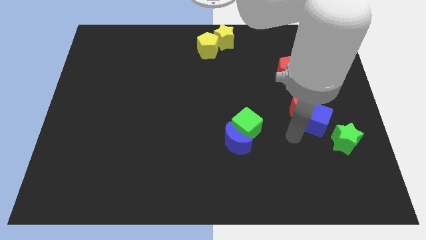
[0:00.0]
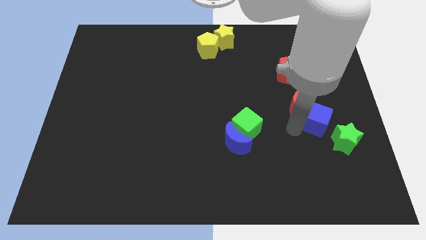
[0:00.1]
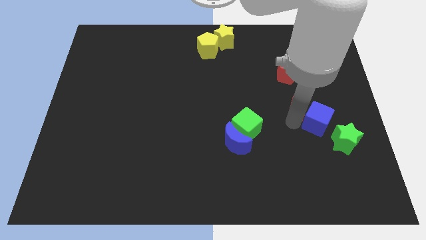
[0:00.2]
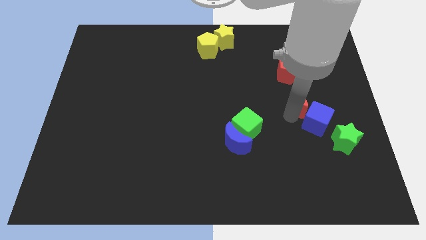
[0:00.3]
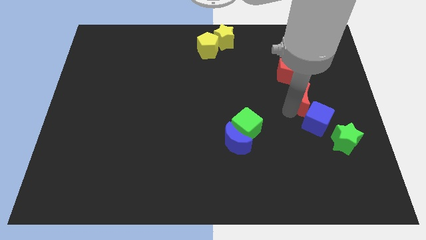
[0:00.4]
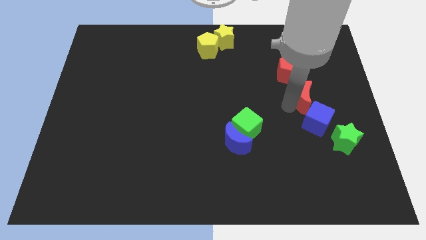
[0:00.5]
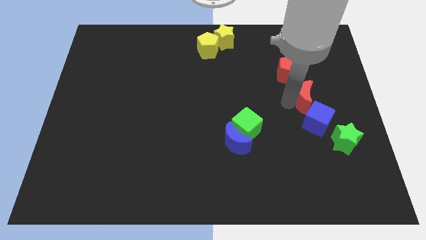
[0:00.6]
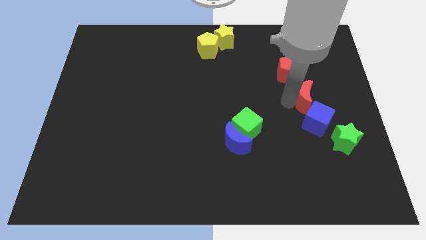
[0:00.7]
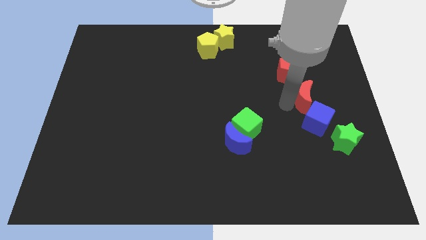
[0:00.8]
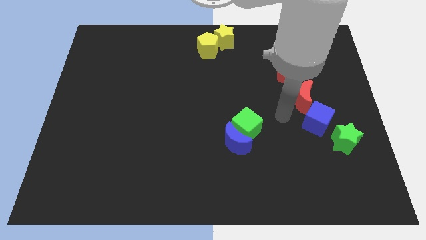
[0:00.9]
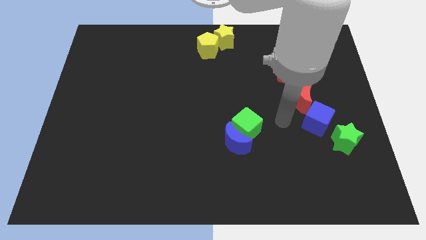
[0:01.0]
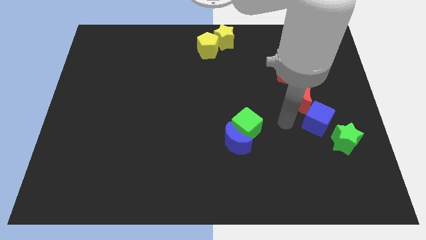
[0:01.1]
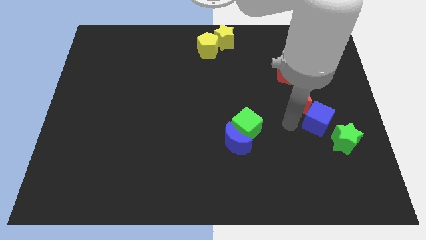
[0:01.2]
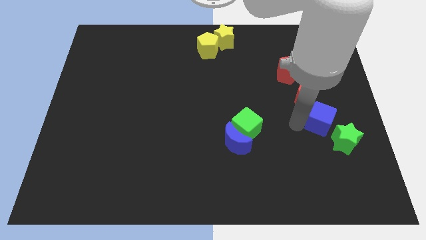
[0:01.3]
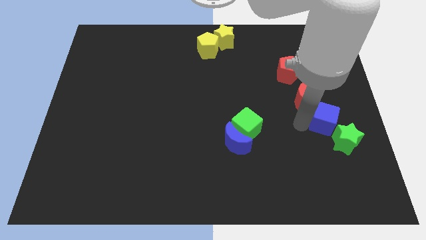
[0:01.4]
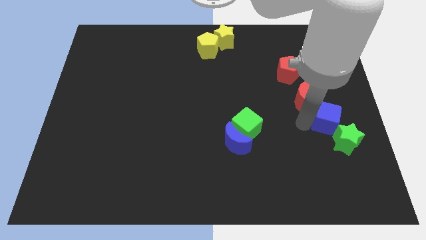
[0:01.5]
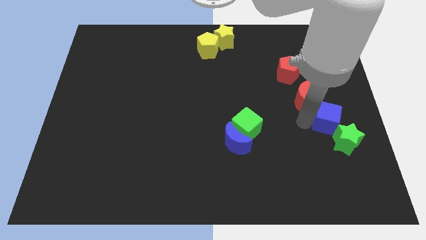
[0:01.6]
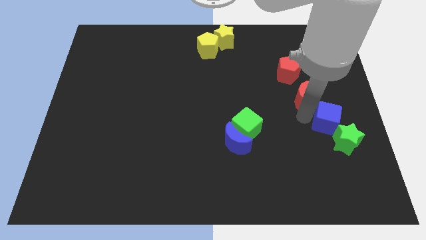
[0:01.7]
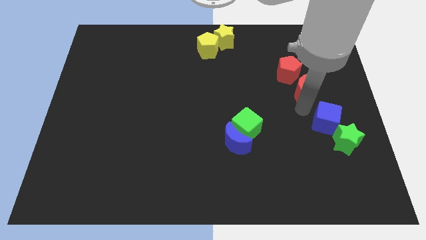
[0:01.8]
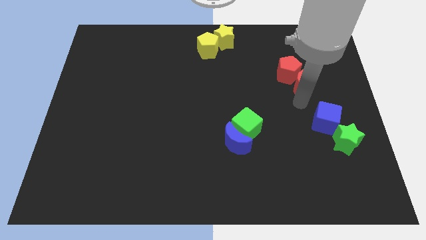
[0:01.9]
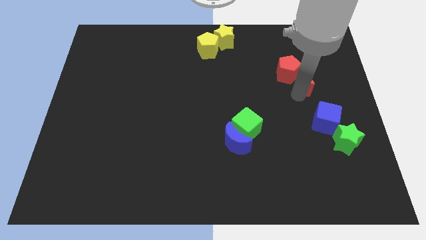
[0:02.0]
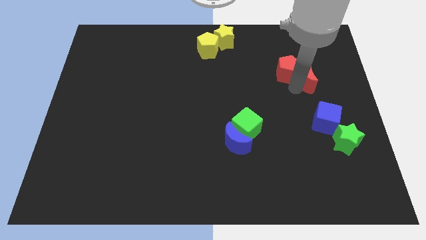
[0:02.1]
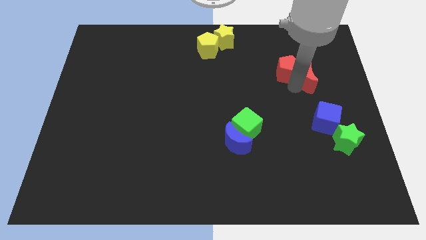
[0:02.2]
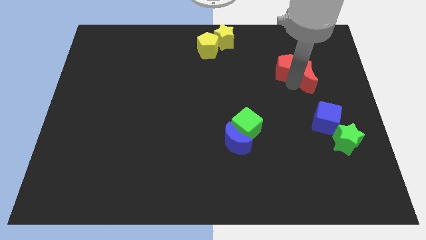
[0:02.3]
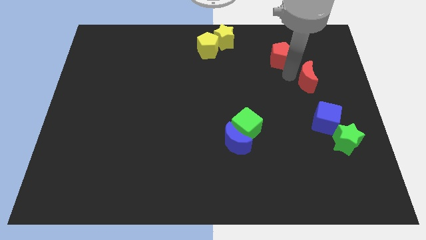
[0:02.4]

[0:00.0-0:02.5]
place the red crescent into the red pentagon

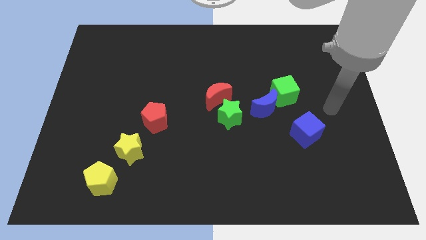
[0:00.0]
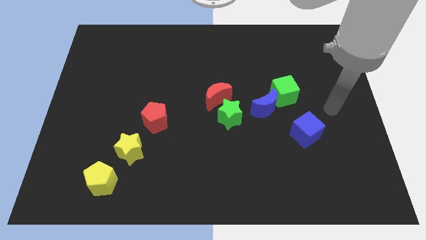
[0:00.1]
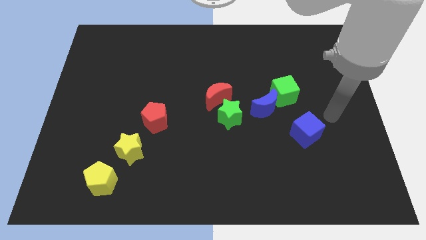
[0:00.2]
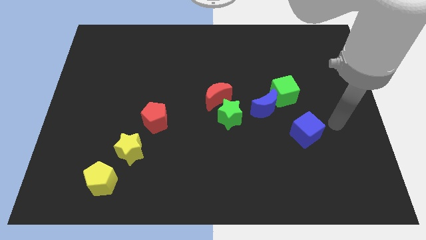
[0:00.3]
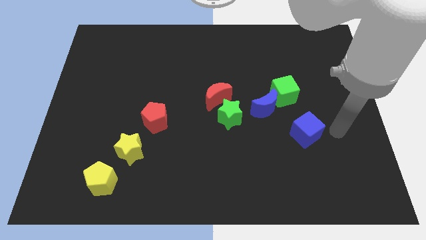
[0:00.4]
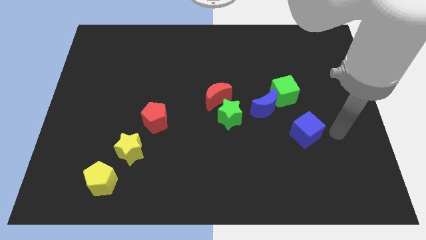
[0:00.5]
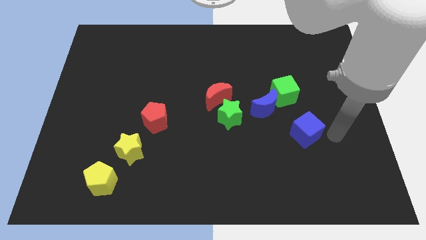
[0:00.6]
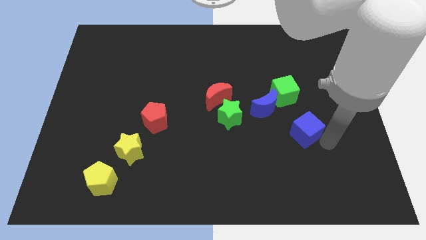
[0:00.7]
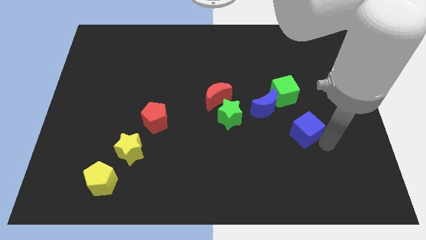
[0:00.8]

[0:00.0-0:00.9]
place your arm towards the right below of blue cube

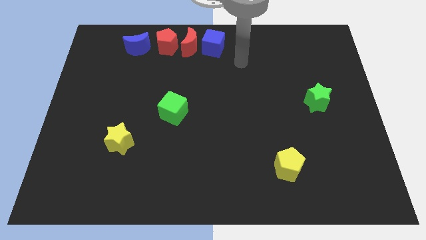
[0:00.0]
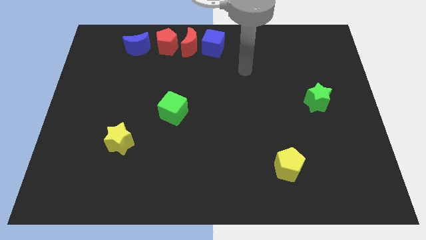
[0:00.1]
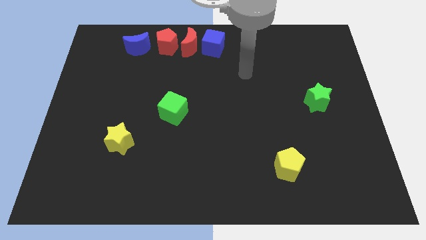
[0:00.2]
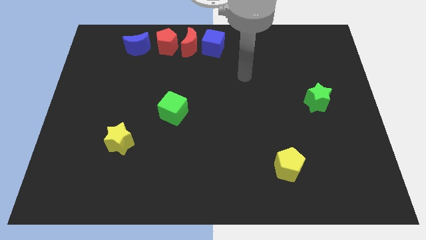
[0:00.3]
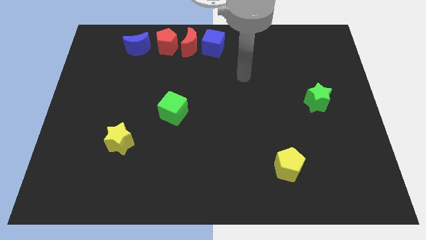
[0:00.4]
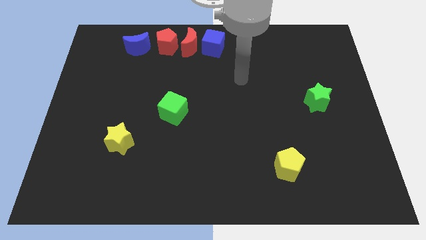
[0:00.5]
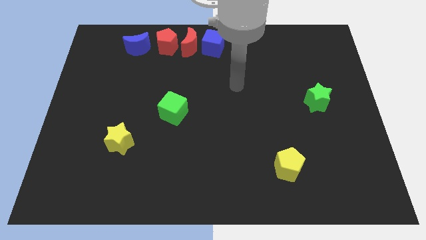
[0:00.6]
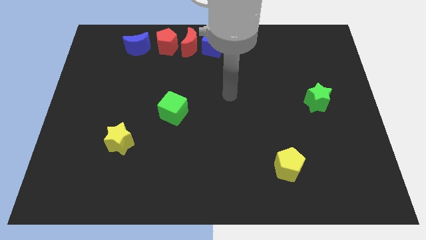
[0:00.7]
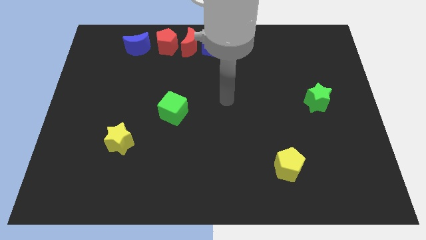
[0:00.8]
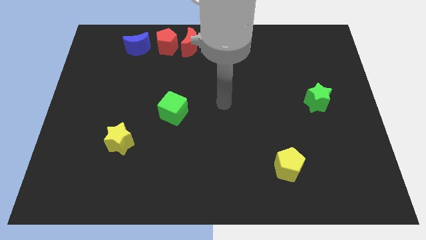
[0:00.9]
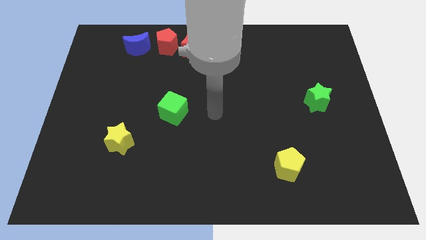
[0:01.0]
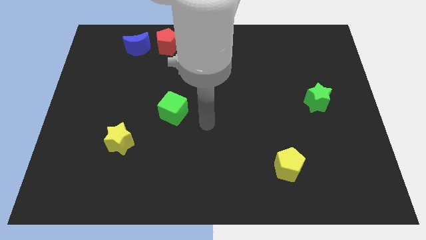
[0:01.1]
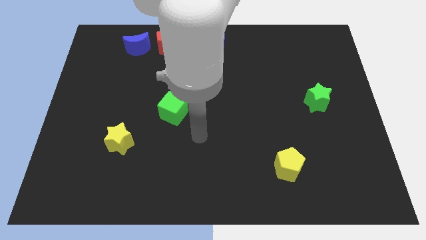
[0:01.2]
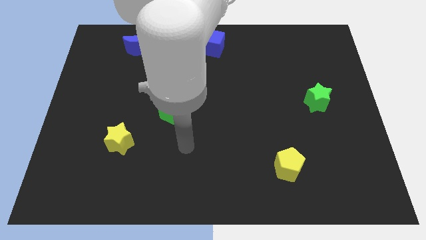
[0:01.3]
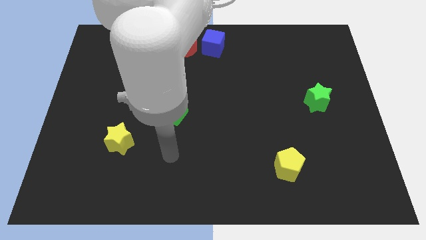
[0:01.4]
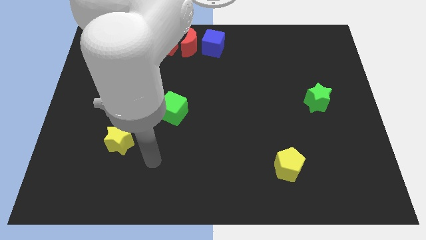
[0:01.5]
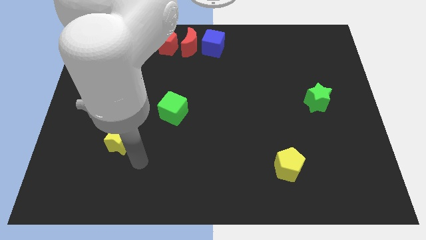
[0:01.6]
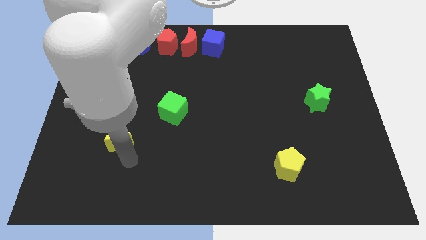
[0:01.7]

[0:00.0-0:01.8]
move your arm to the bottom of the yellow star

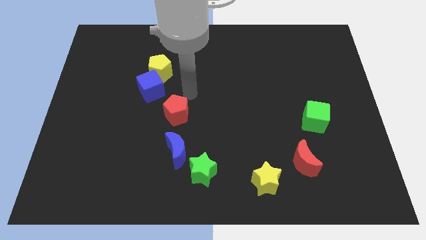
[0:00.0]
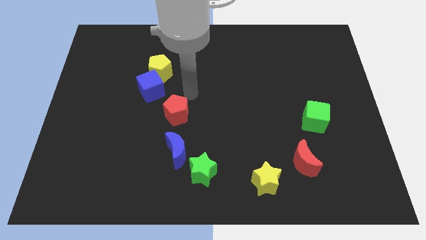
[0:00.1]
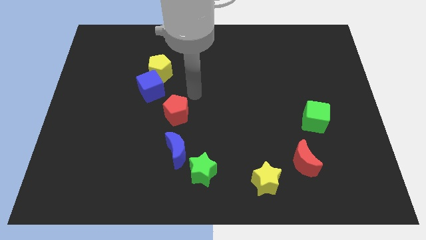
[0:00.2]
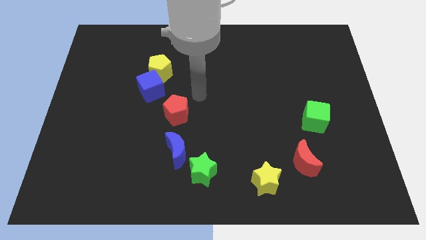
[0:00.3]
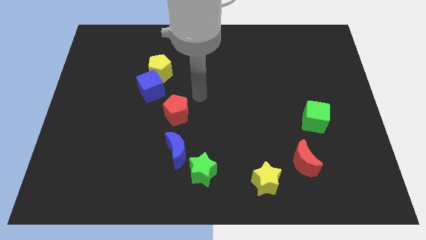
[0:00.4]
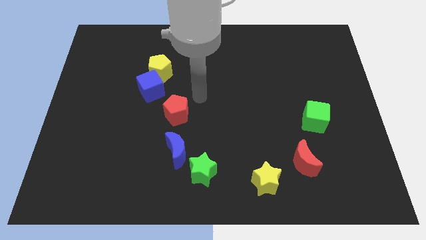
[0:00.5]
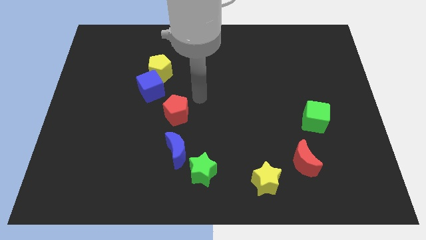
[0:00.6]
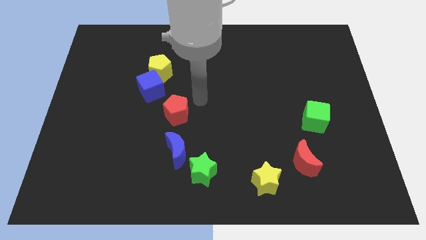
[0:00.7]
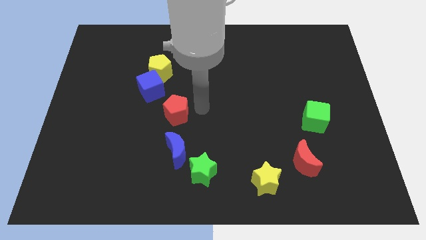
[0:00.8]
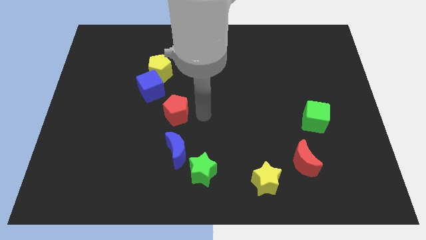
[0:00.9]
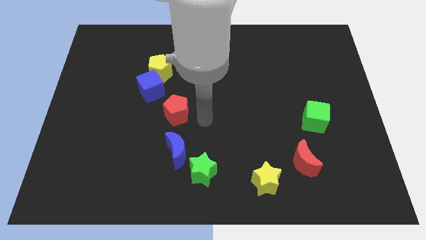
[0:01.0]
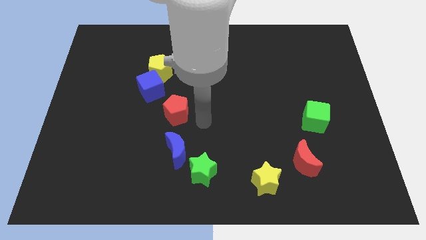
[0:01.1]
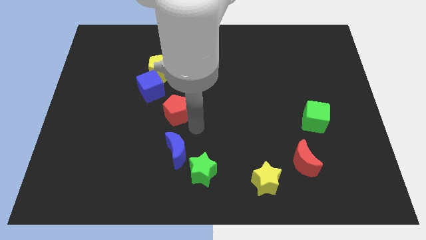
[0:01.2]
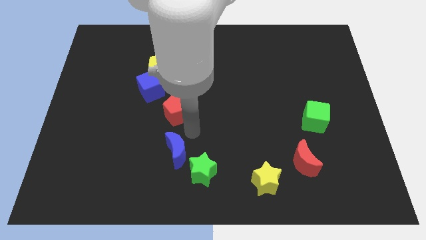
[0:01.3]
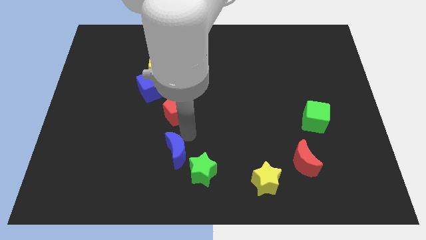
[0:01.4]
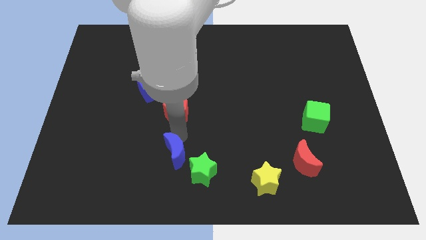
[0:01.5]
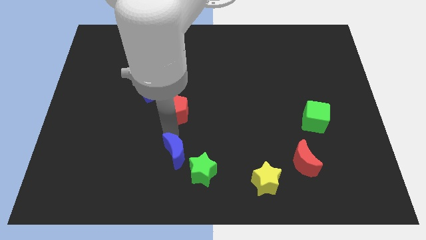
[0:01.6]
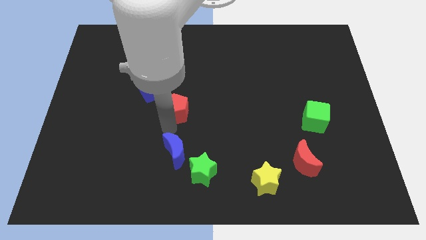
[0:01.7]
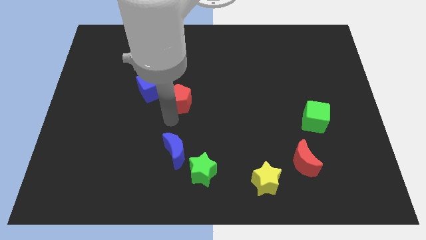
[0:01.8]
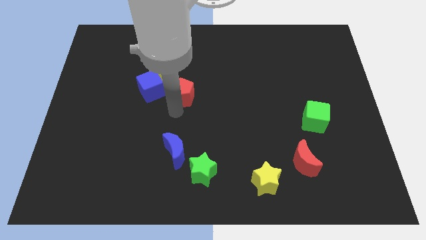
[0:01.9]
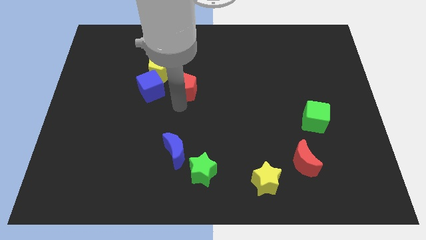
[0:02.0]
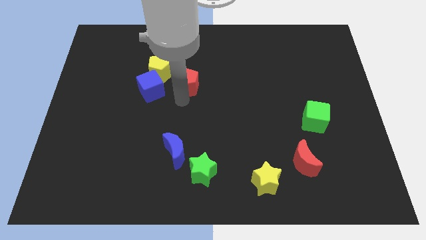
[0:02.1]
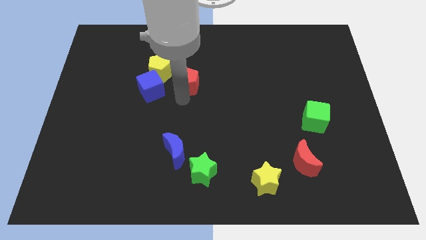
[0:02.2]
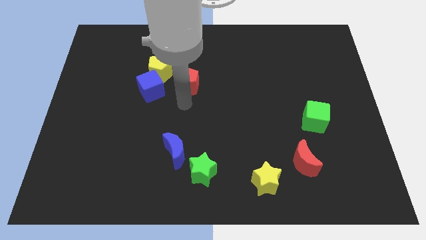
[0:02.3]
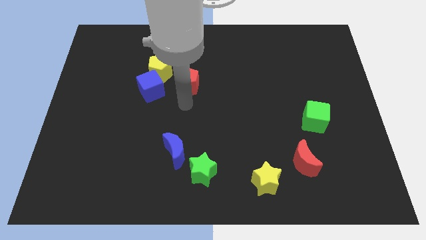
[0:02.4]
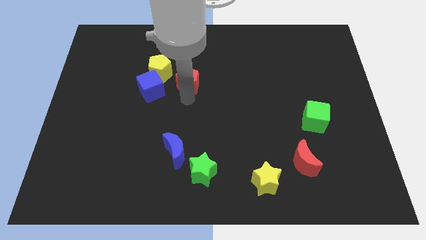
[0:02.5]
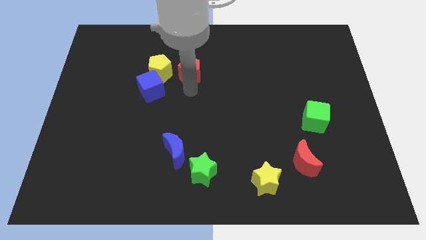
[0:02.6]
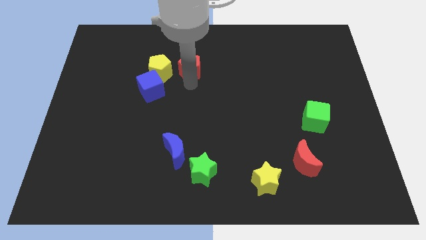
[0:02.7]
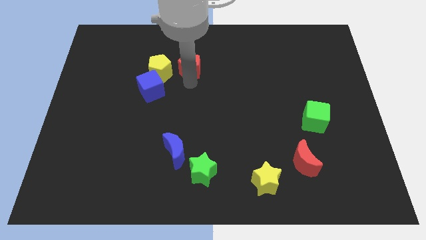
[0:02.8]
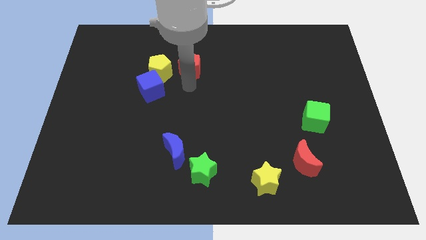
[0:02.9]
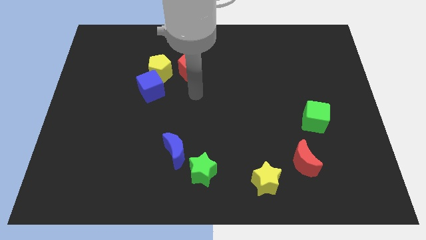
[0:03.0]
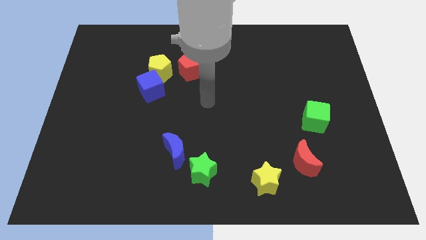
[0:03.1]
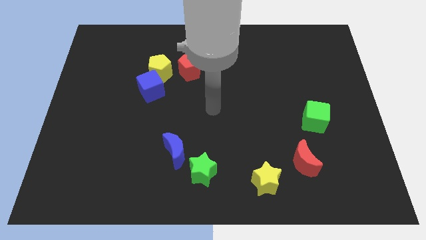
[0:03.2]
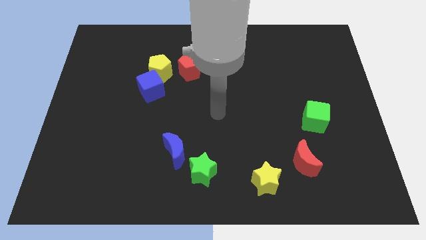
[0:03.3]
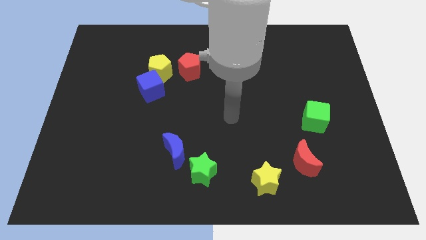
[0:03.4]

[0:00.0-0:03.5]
push red pentagon parallel to the yellow pentagon

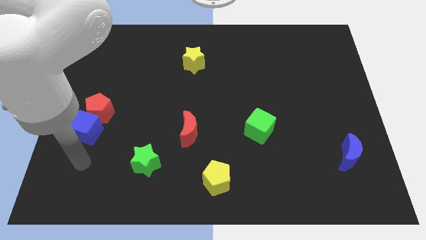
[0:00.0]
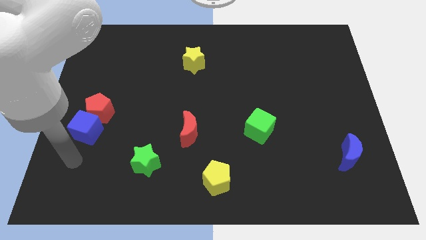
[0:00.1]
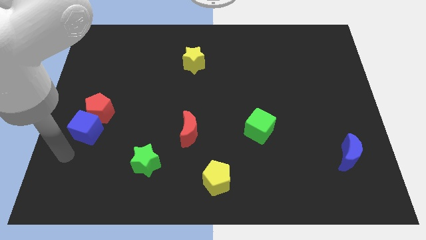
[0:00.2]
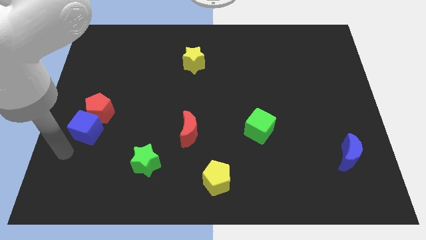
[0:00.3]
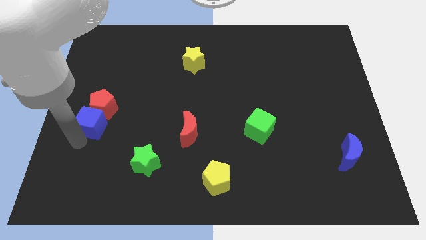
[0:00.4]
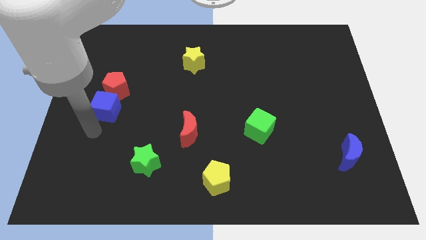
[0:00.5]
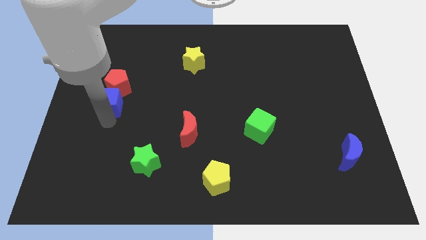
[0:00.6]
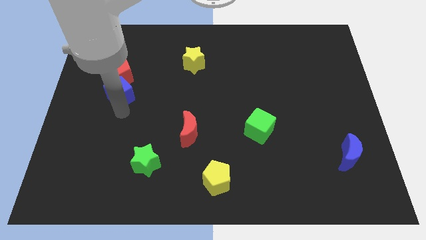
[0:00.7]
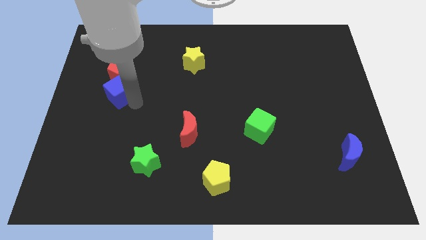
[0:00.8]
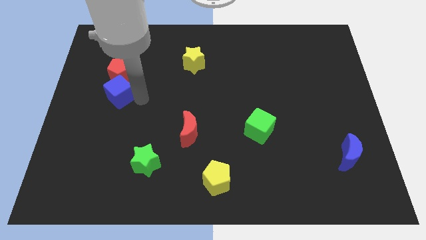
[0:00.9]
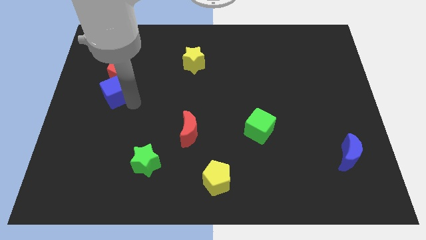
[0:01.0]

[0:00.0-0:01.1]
push blue cube slightly towards upwards
